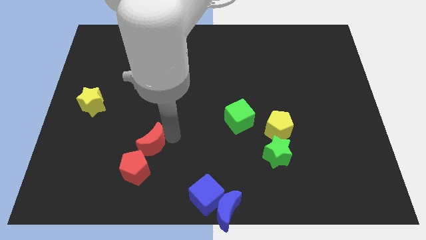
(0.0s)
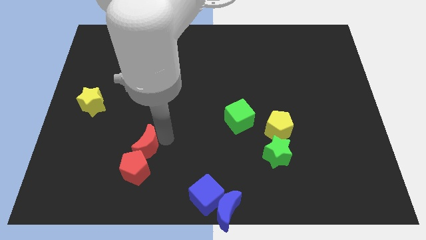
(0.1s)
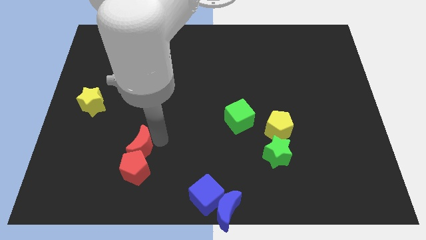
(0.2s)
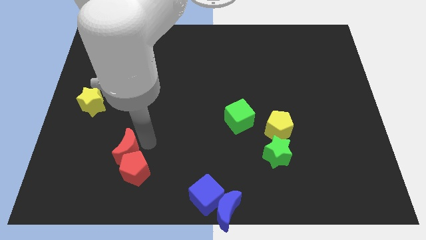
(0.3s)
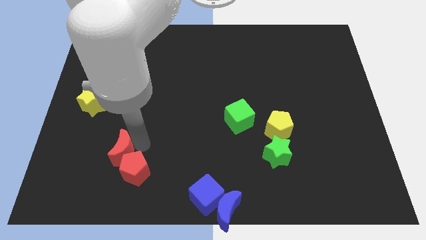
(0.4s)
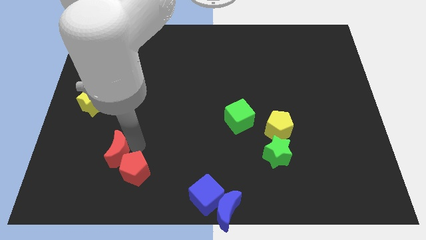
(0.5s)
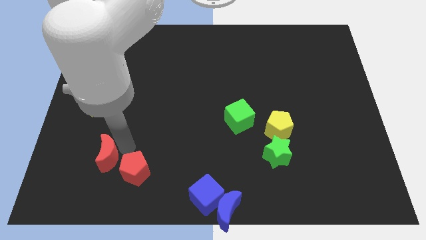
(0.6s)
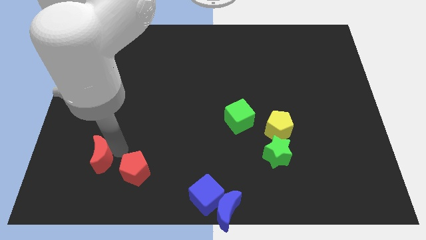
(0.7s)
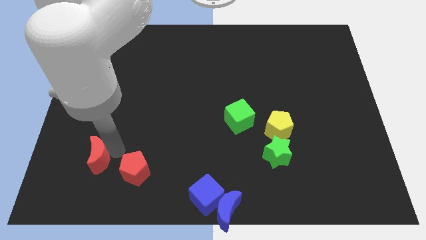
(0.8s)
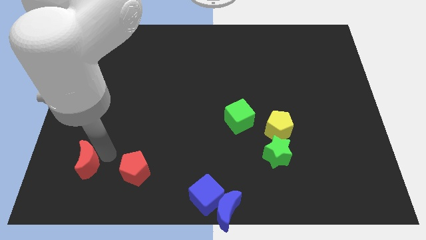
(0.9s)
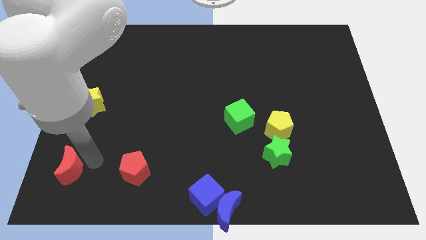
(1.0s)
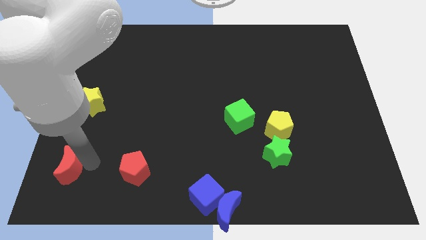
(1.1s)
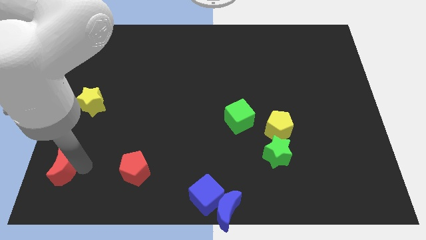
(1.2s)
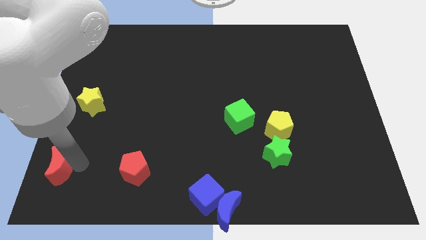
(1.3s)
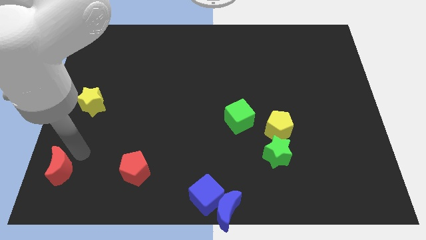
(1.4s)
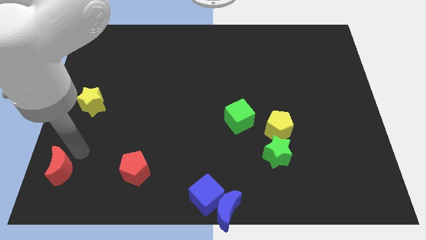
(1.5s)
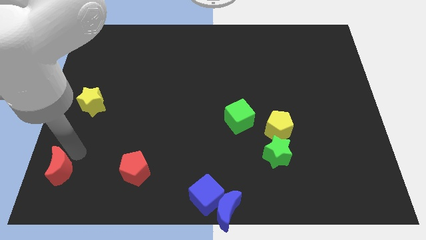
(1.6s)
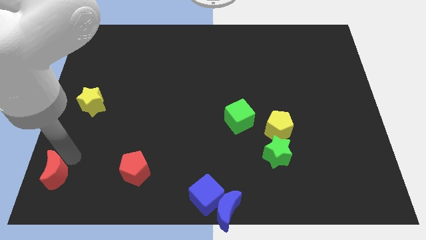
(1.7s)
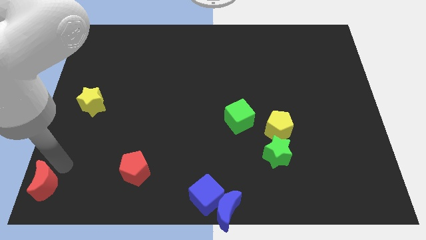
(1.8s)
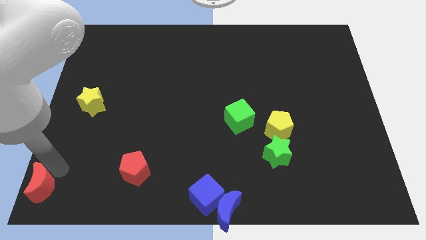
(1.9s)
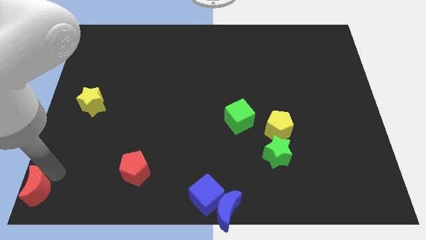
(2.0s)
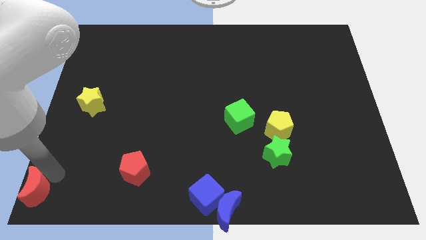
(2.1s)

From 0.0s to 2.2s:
separate red moon from red pentagon

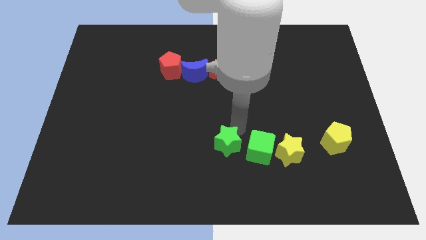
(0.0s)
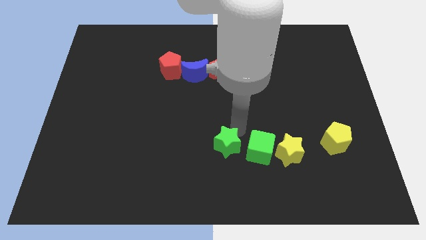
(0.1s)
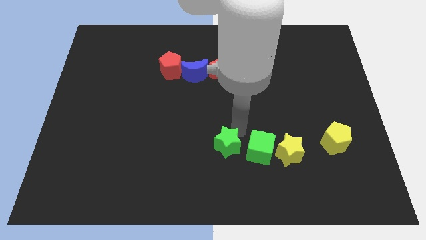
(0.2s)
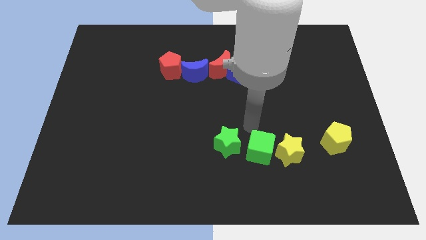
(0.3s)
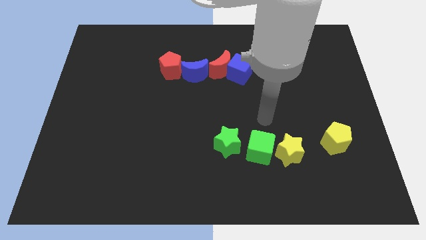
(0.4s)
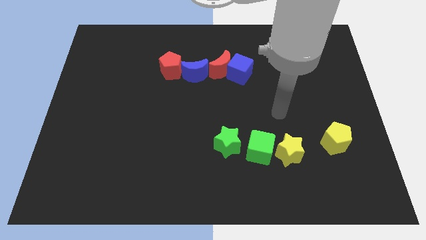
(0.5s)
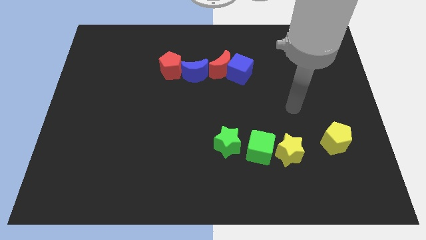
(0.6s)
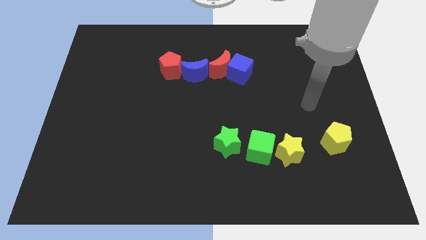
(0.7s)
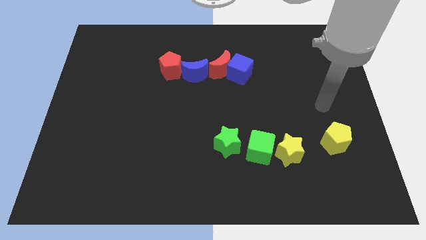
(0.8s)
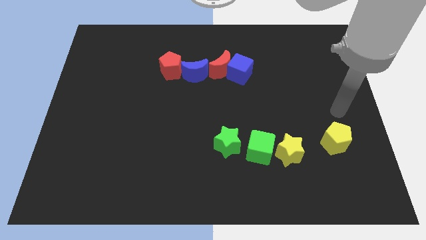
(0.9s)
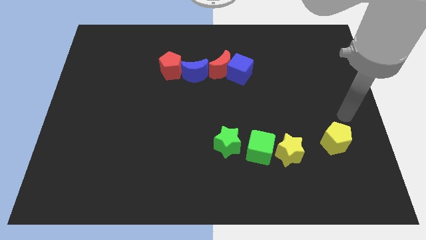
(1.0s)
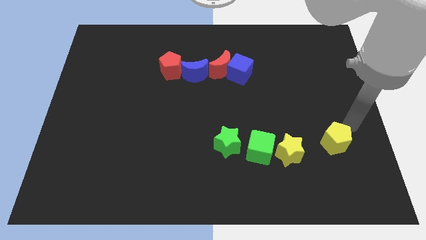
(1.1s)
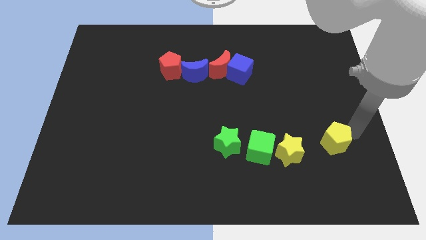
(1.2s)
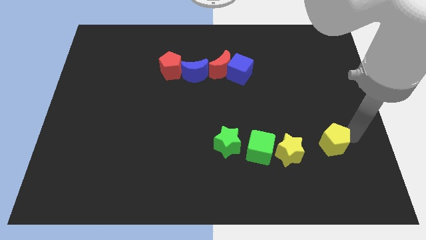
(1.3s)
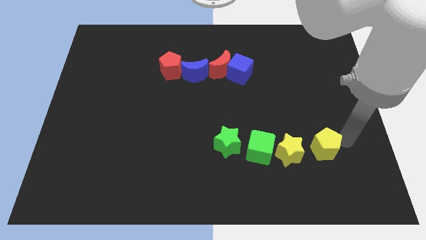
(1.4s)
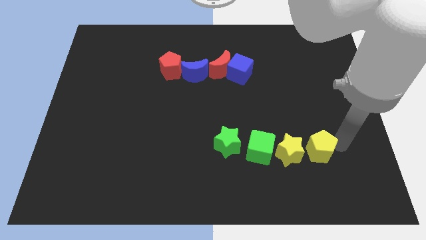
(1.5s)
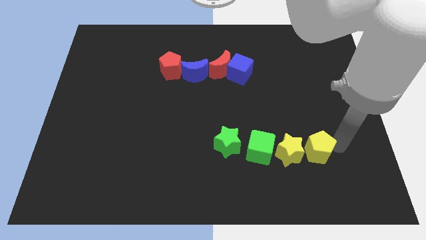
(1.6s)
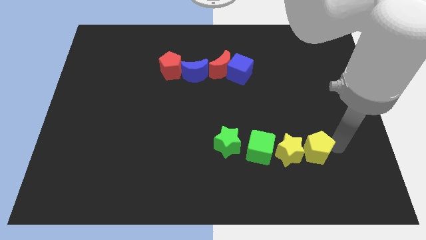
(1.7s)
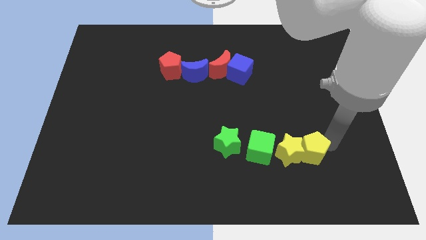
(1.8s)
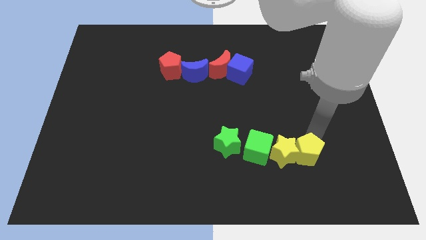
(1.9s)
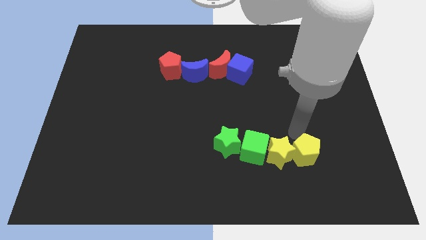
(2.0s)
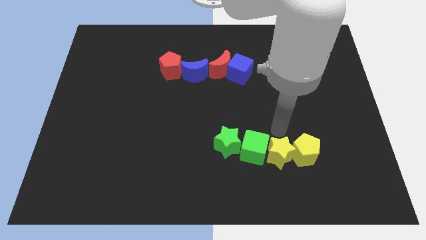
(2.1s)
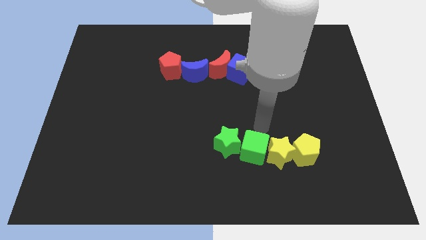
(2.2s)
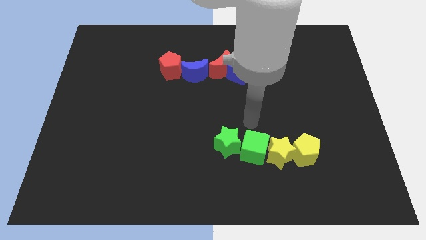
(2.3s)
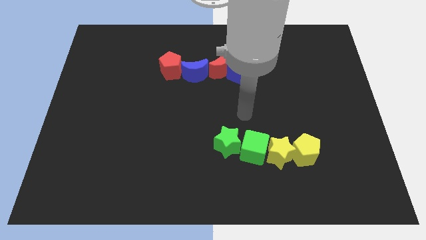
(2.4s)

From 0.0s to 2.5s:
move the yellow pentagon right to the yellow star

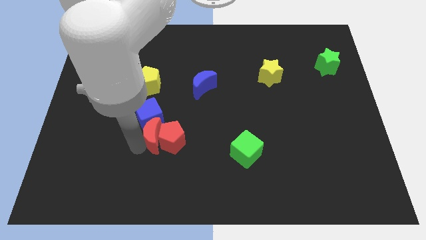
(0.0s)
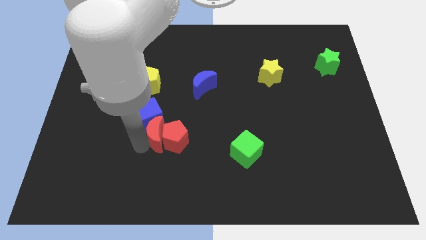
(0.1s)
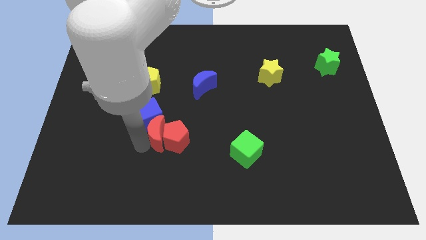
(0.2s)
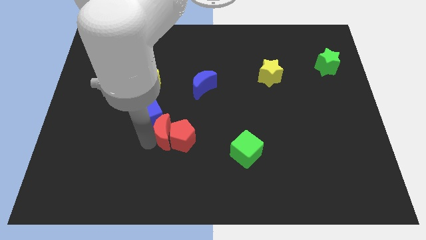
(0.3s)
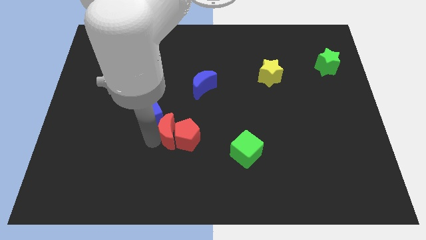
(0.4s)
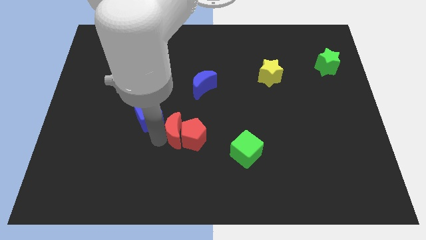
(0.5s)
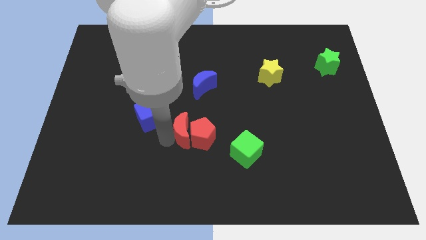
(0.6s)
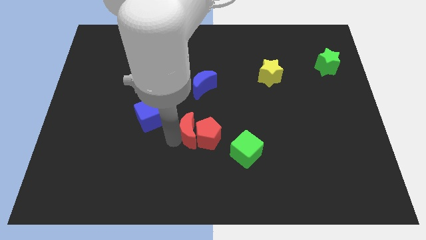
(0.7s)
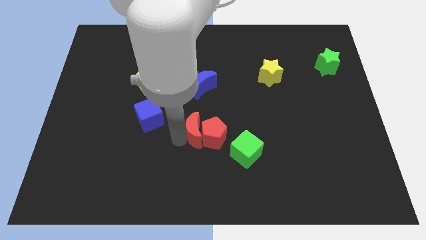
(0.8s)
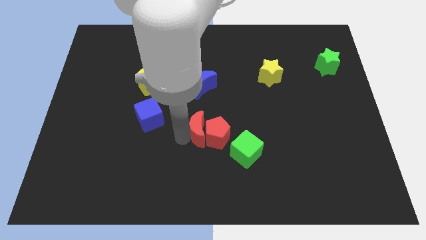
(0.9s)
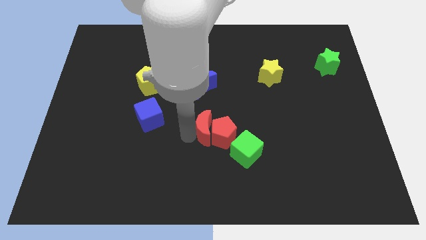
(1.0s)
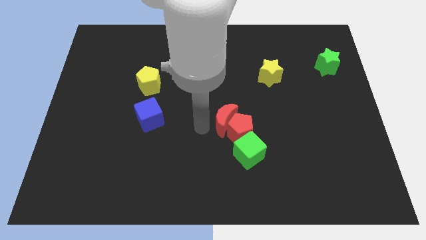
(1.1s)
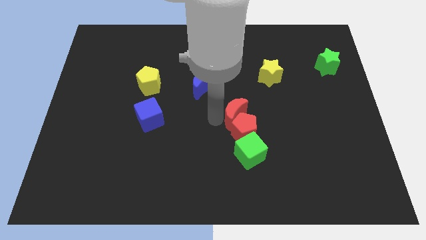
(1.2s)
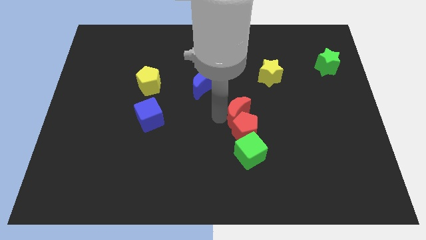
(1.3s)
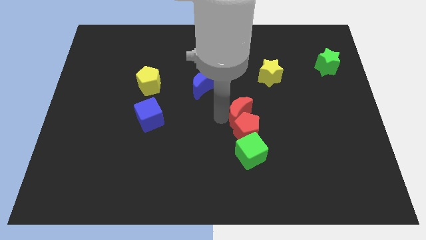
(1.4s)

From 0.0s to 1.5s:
move the red crescent into the pentagon towards the center of board

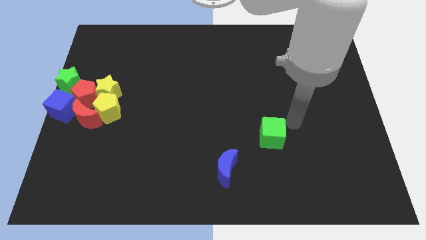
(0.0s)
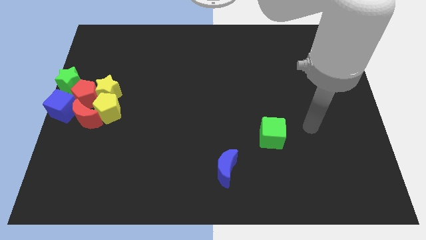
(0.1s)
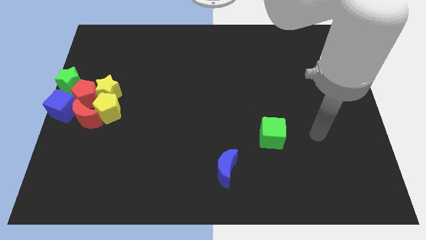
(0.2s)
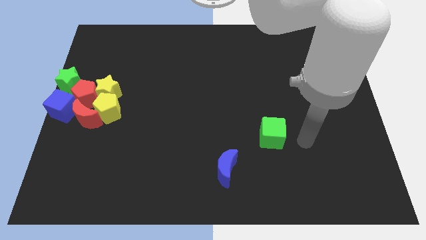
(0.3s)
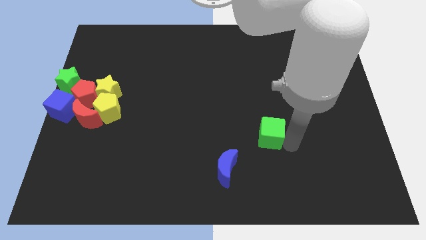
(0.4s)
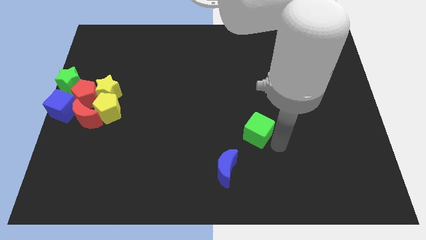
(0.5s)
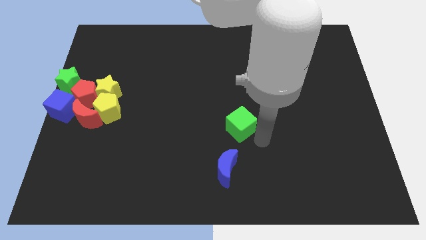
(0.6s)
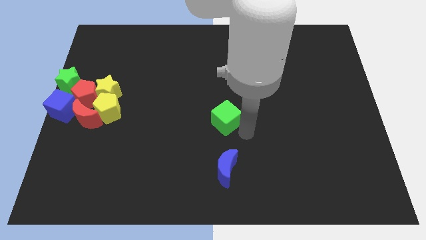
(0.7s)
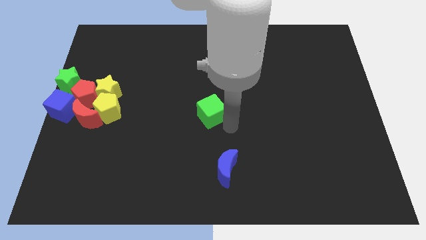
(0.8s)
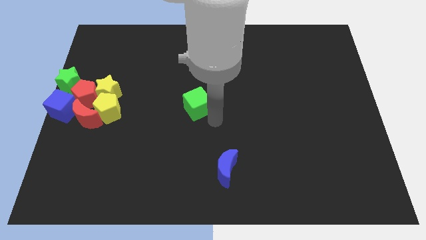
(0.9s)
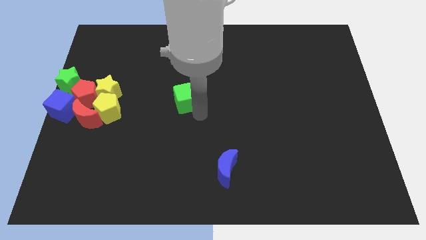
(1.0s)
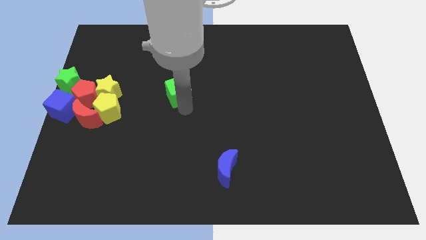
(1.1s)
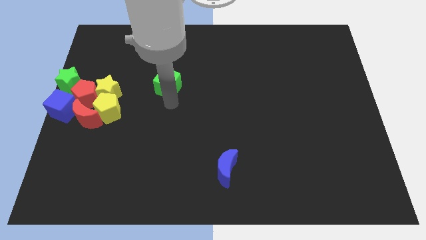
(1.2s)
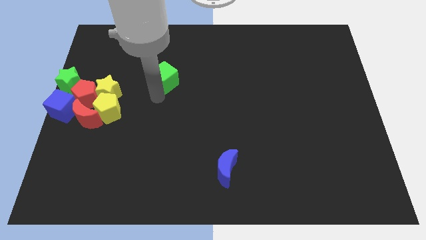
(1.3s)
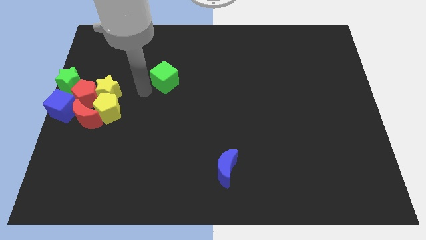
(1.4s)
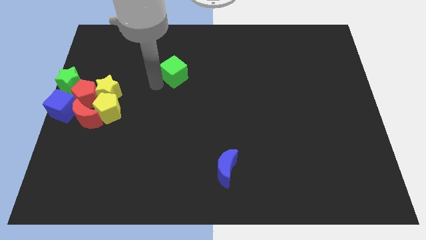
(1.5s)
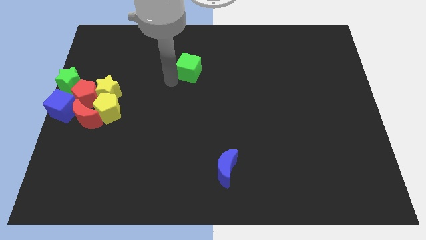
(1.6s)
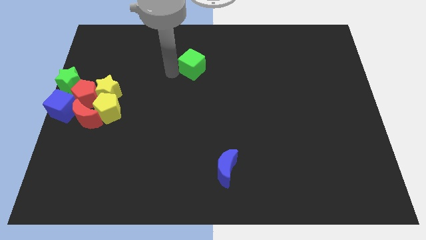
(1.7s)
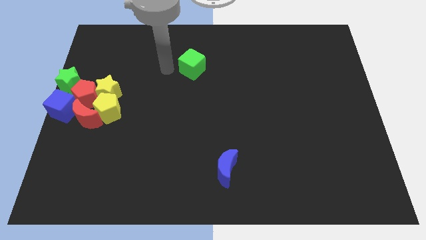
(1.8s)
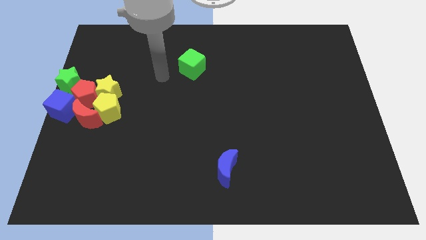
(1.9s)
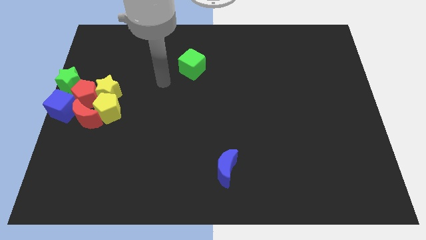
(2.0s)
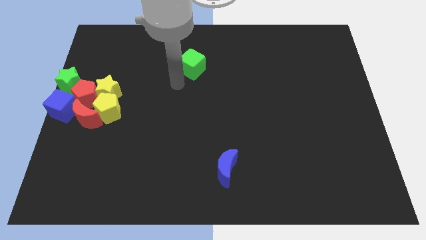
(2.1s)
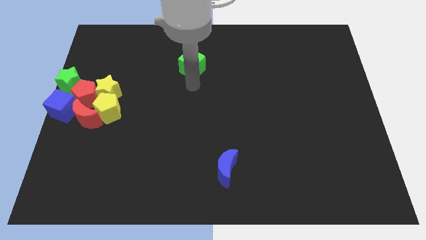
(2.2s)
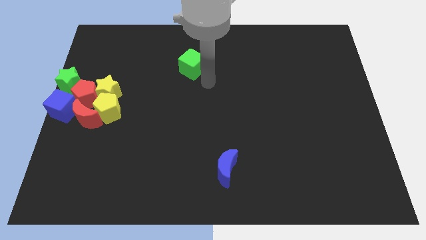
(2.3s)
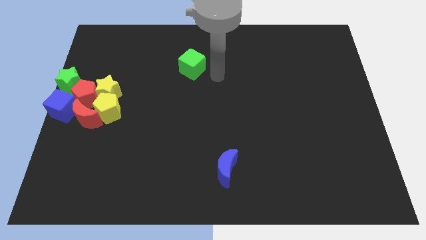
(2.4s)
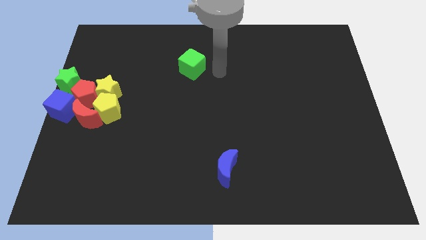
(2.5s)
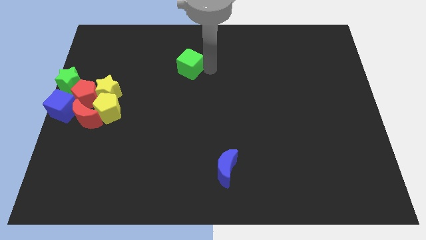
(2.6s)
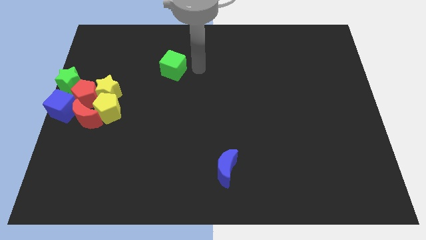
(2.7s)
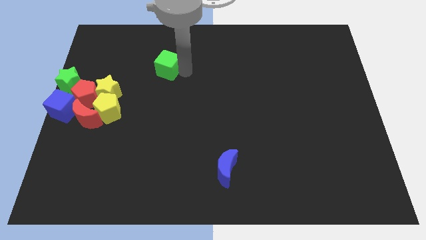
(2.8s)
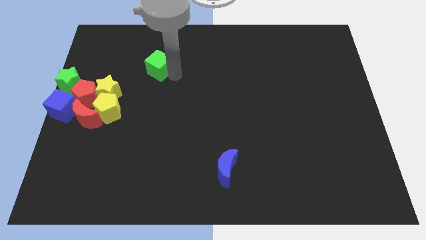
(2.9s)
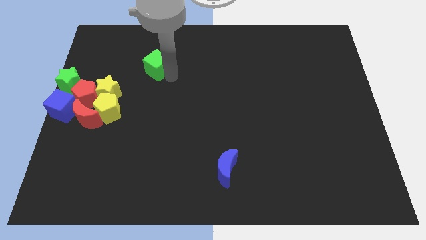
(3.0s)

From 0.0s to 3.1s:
push the green cube towards the top of the red pentagon
